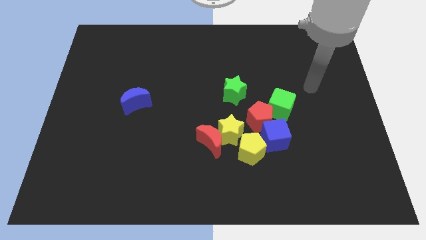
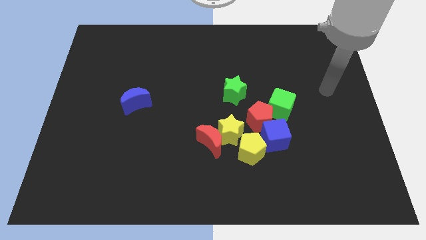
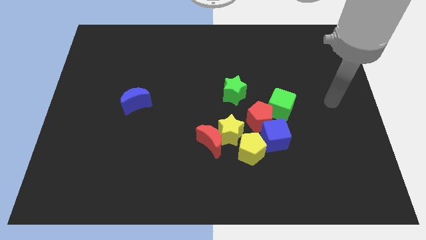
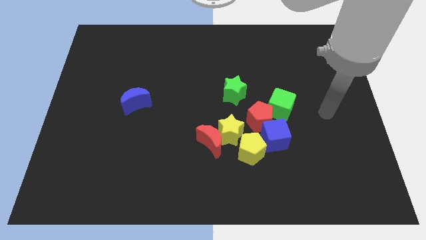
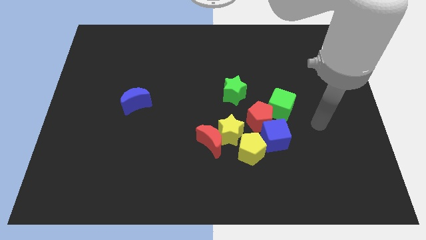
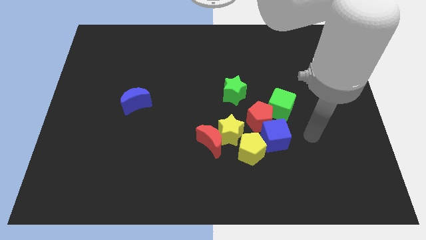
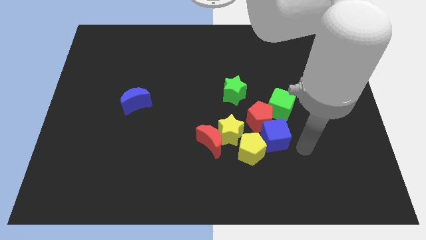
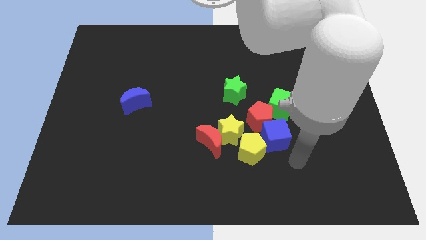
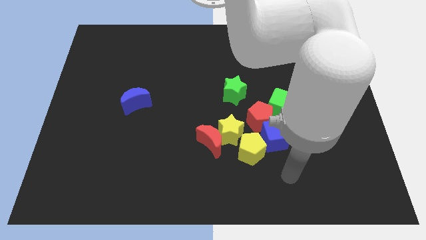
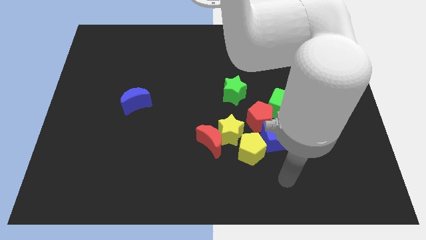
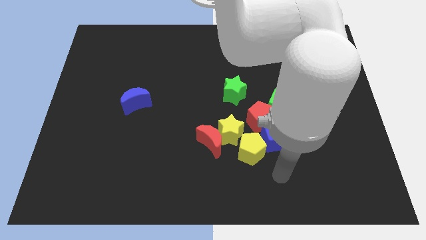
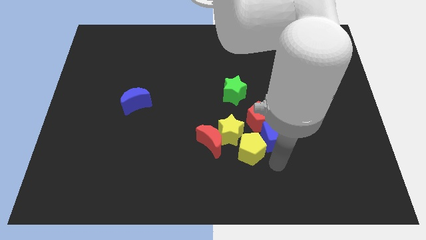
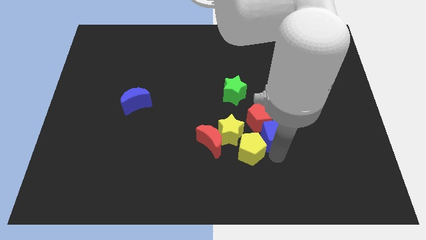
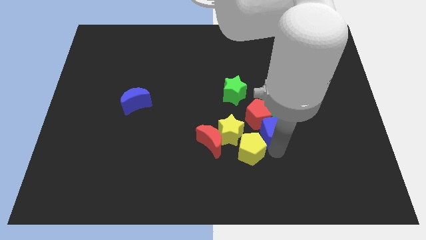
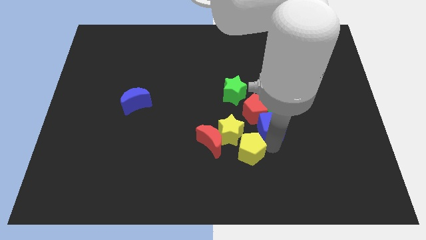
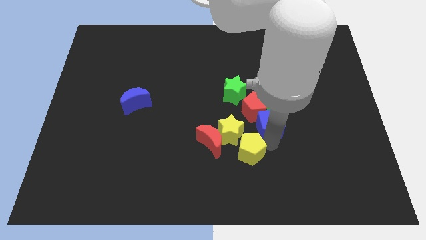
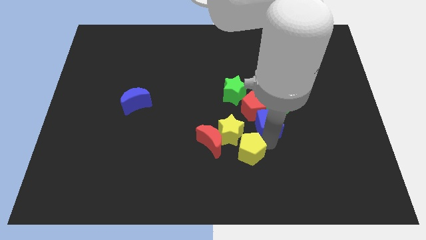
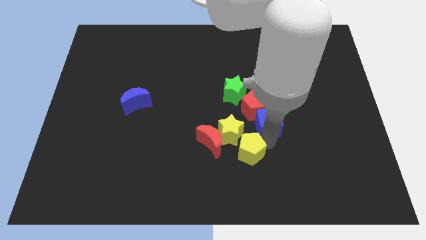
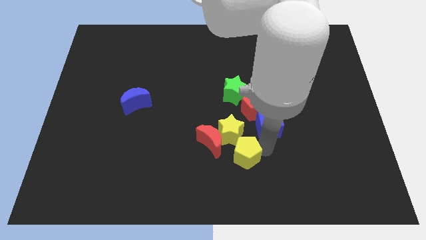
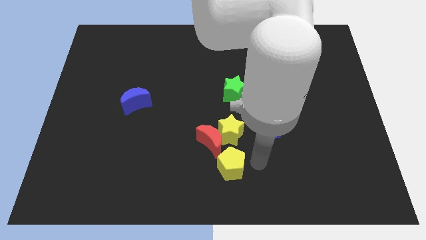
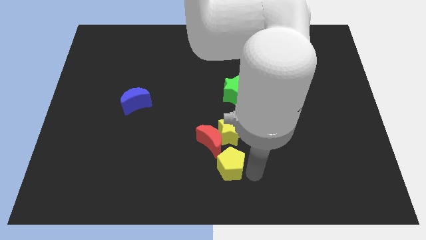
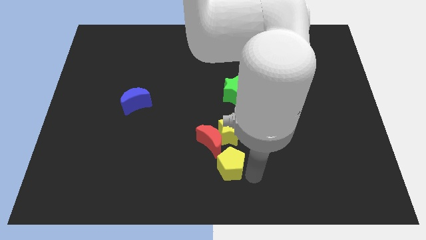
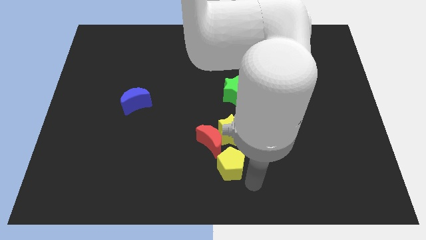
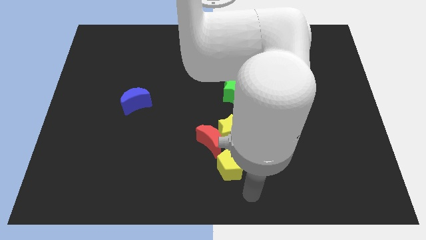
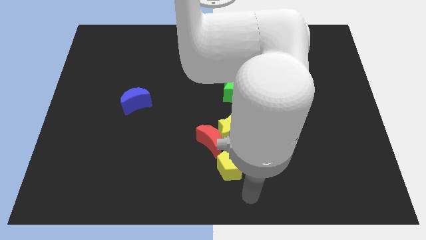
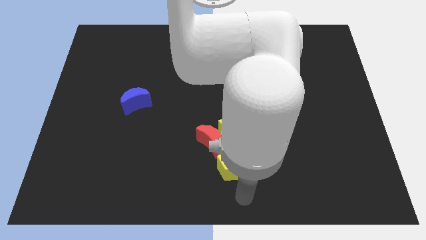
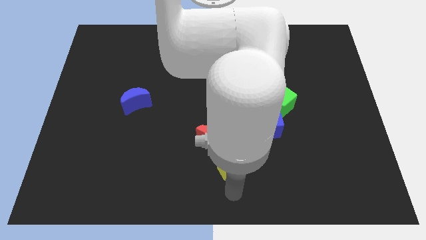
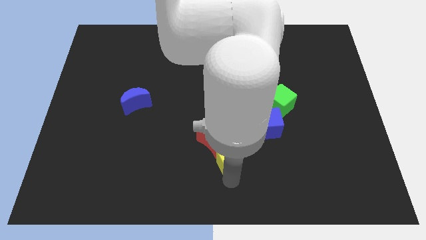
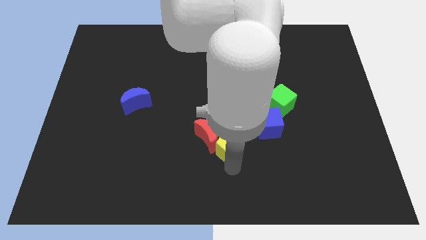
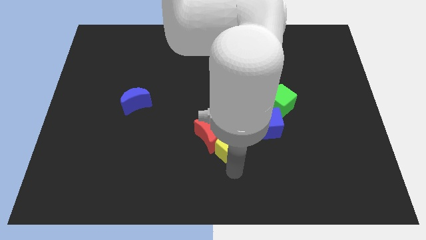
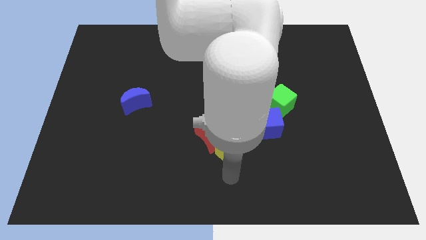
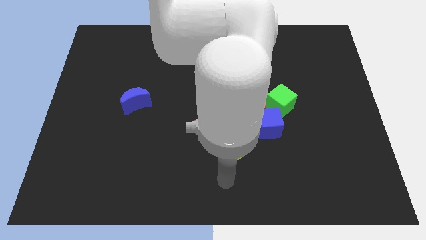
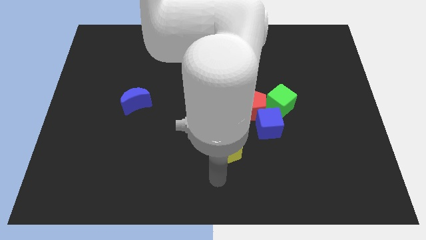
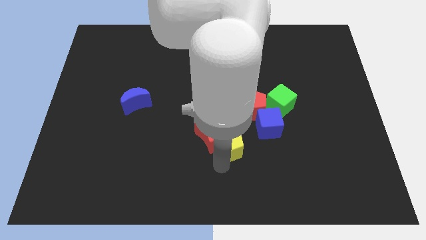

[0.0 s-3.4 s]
push the yellow blocks to bottom of the green star

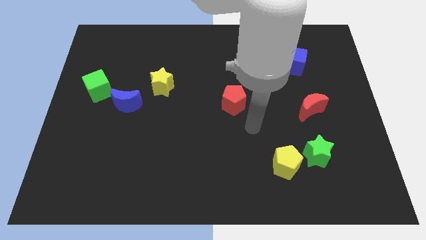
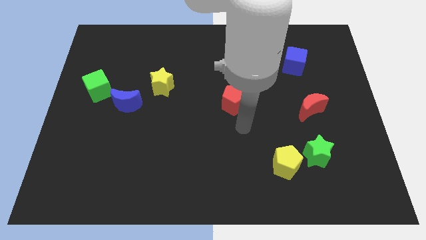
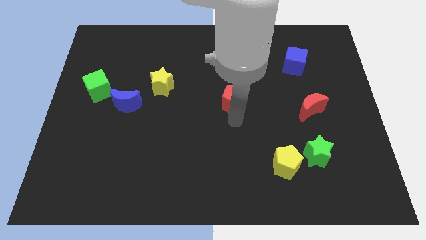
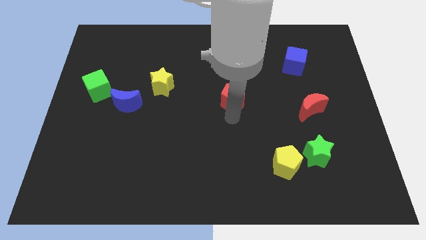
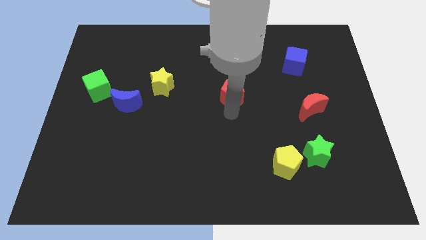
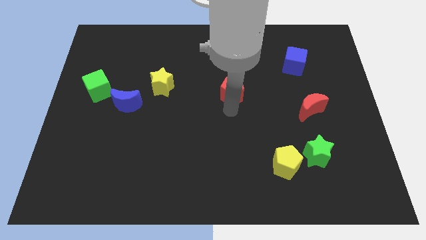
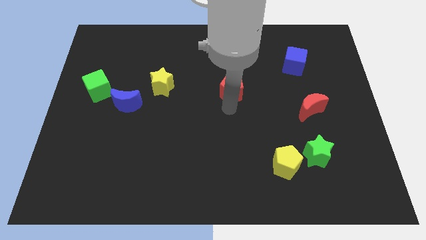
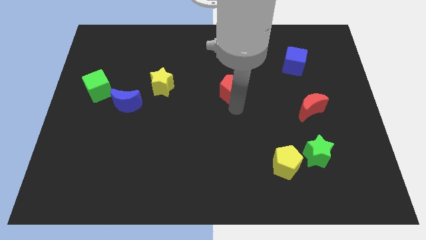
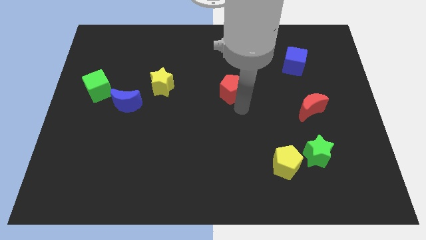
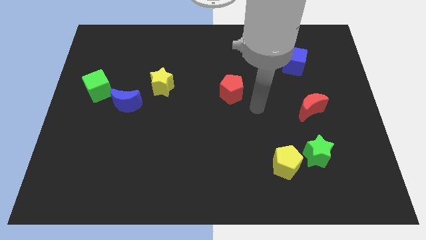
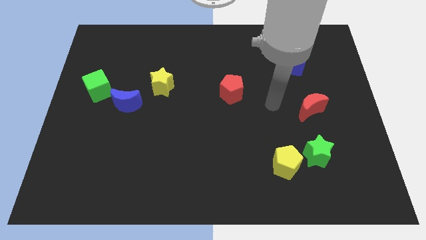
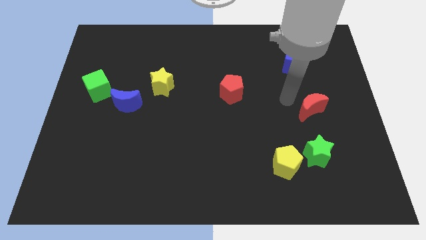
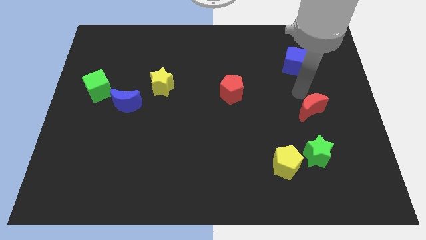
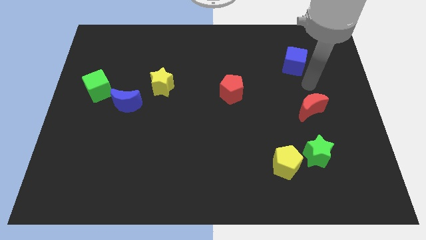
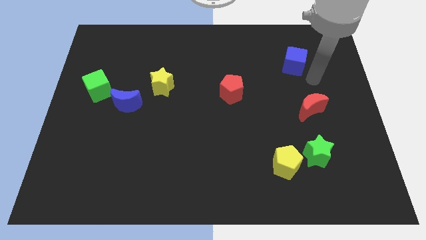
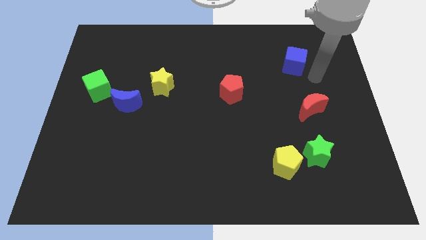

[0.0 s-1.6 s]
push red pentagon a bit up wards

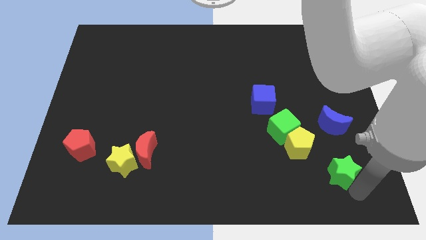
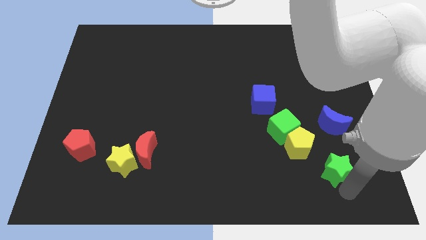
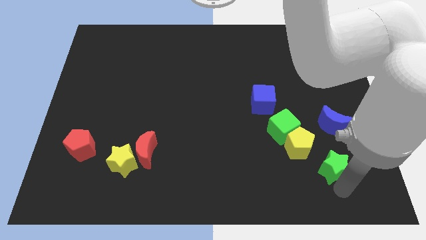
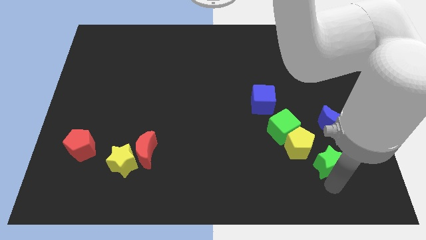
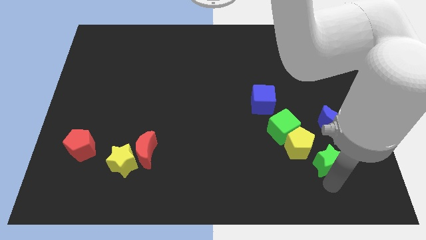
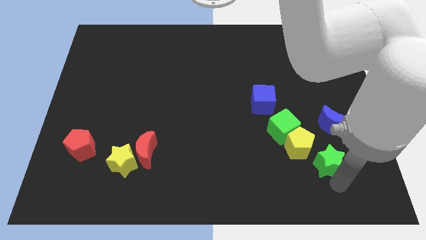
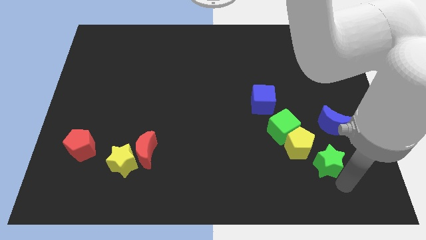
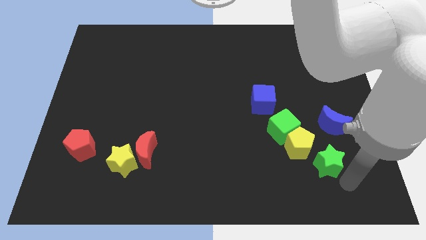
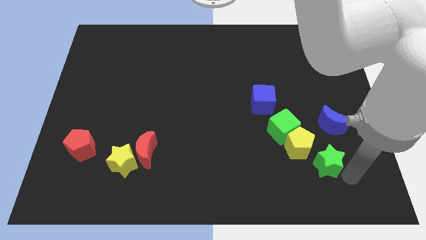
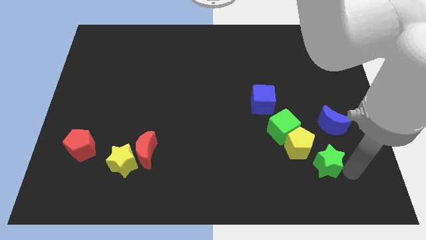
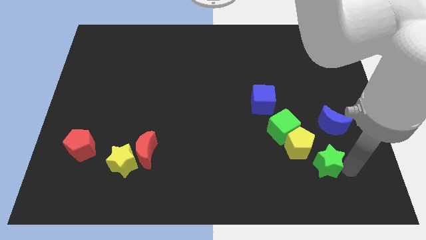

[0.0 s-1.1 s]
place green star to the bottom right of yellow pentagon

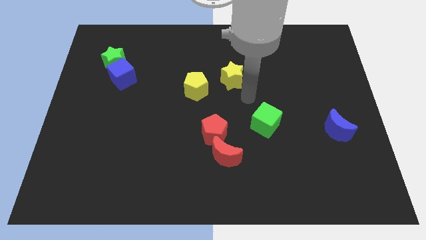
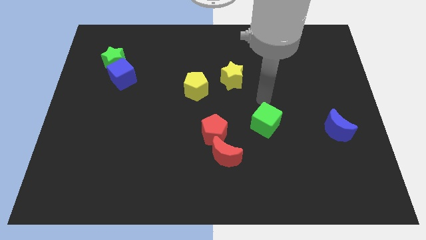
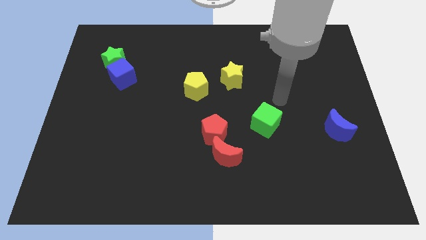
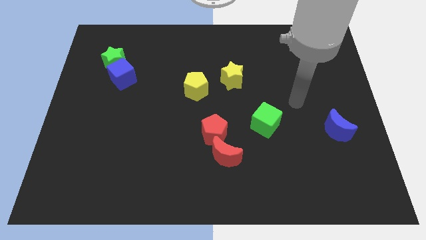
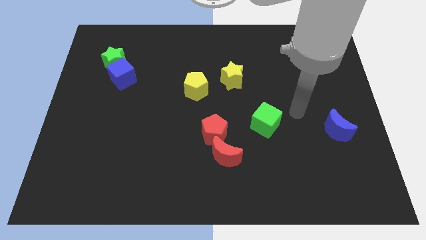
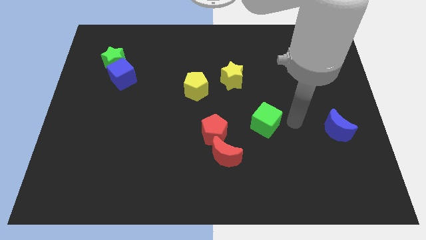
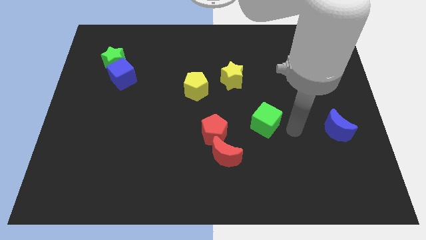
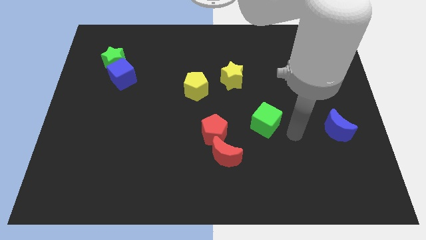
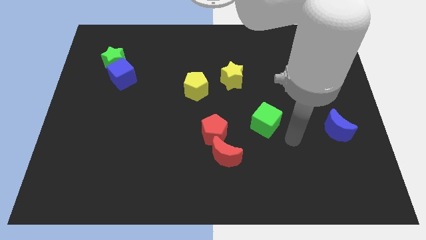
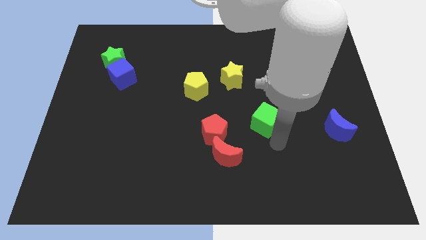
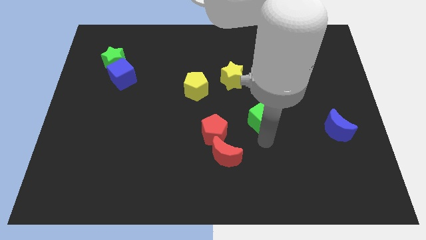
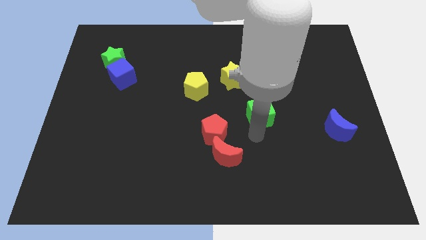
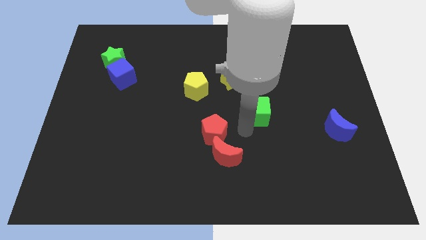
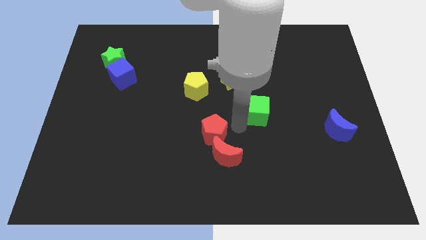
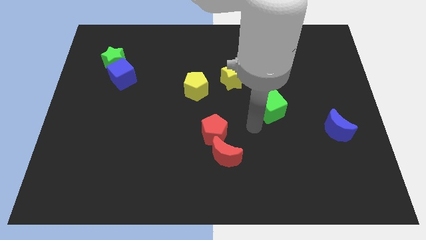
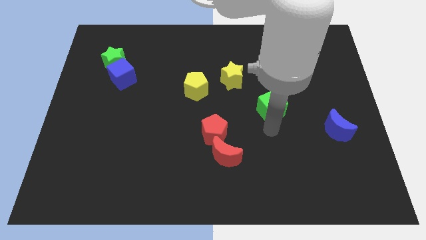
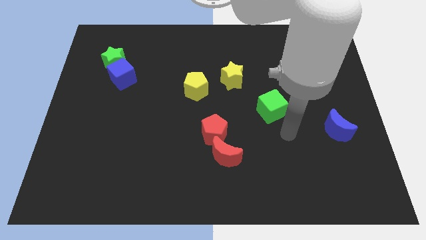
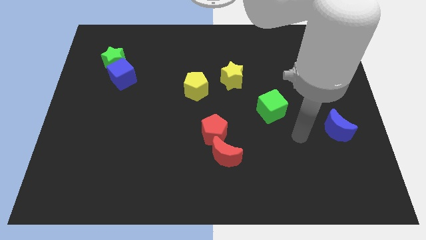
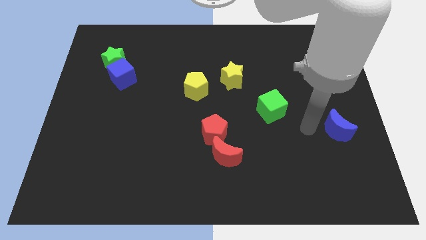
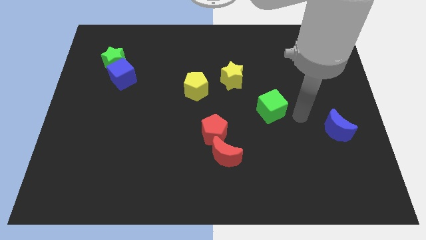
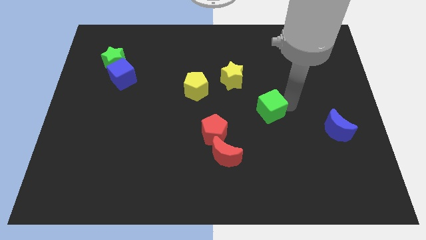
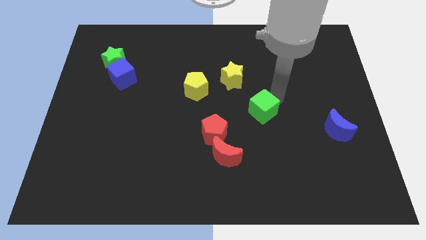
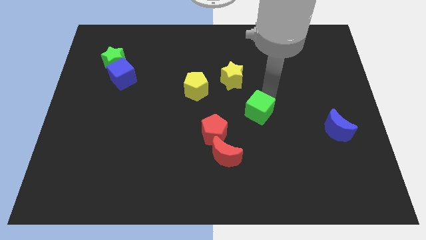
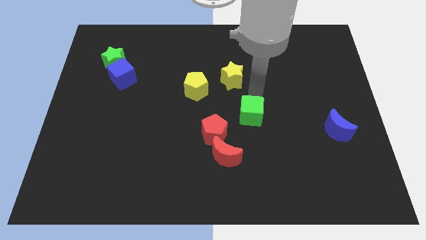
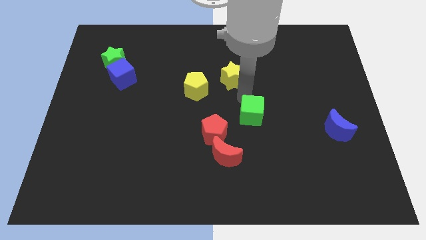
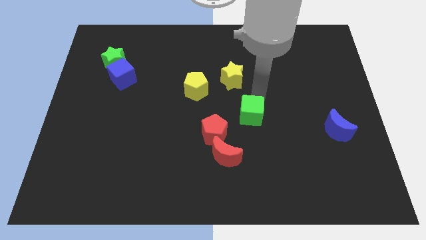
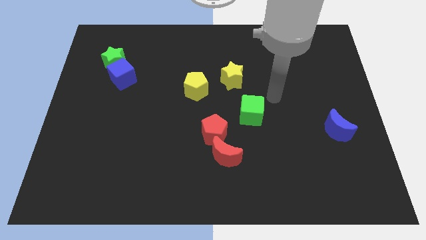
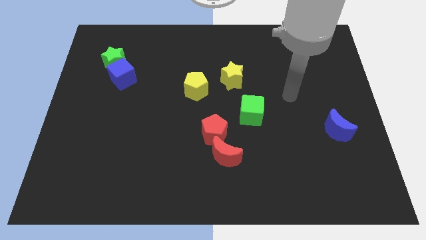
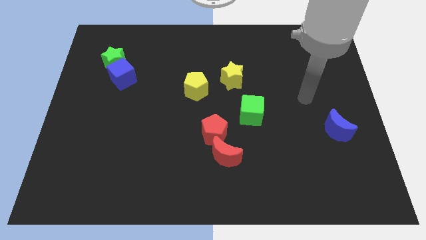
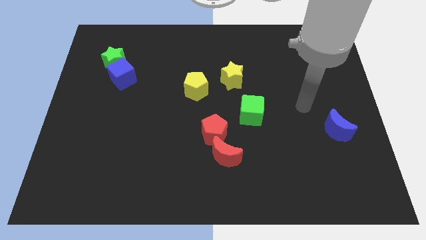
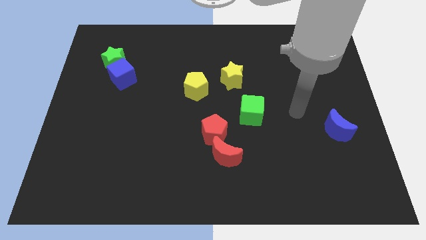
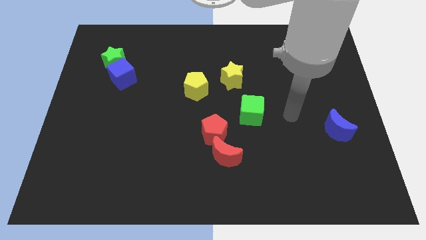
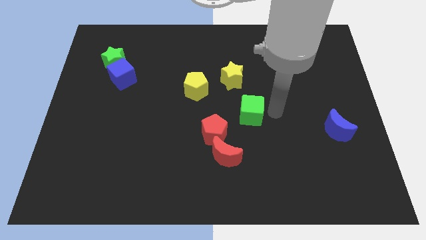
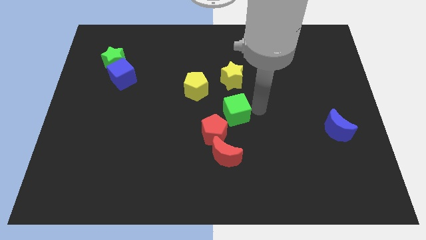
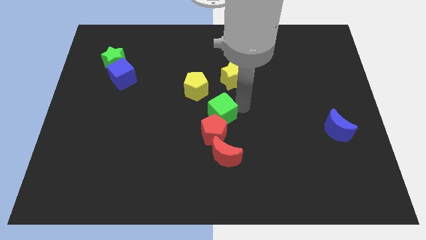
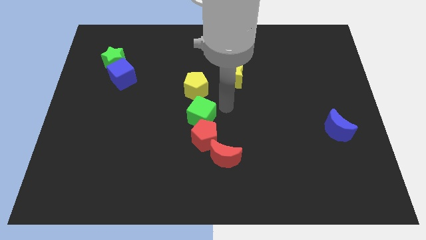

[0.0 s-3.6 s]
move the green cube to the bottom of the yellow pentagon
